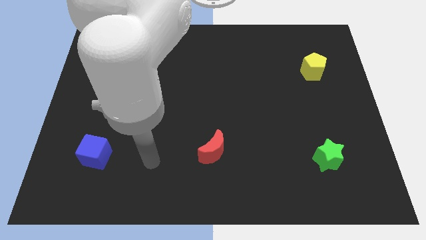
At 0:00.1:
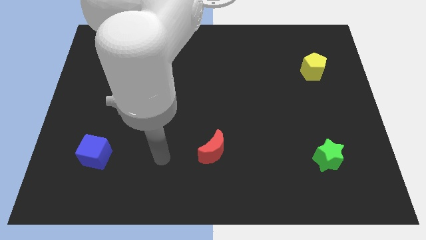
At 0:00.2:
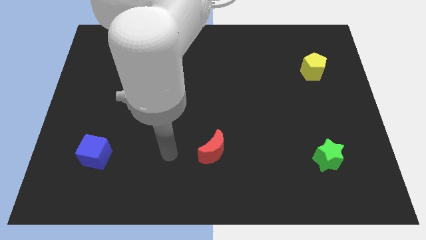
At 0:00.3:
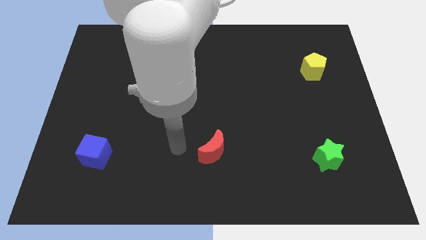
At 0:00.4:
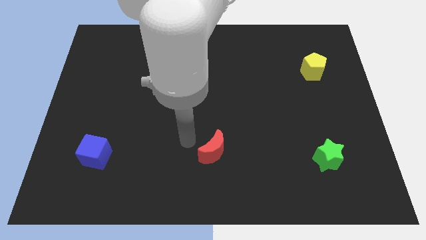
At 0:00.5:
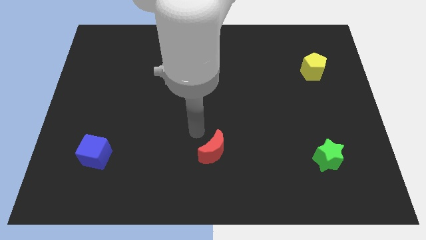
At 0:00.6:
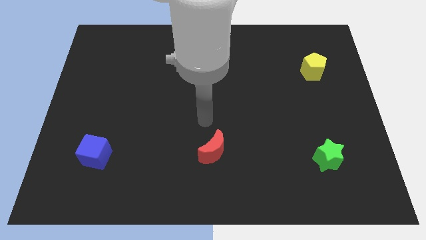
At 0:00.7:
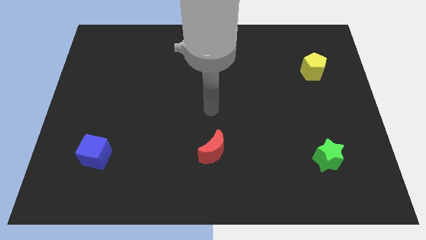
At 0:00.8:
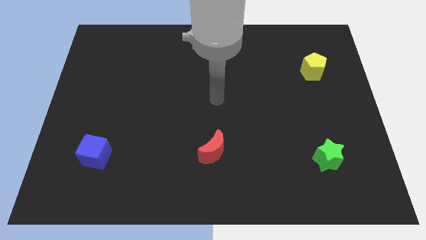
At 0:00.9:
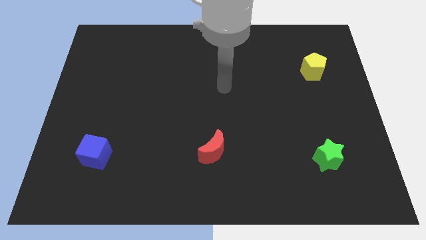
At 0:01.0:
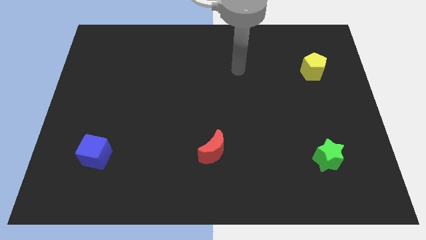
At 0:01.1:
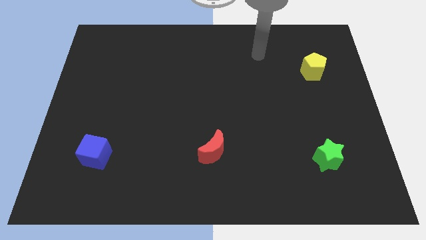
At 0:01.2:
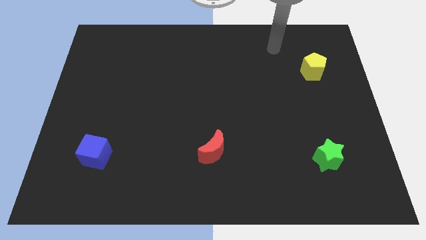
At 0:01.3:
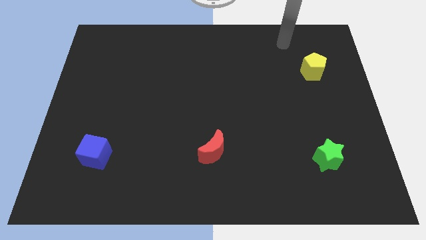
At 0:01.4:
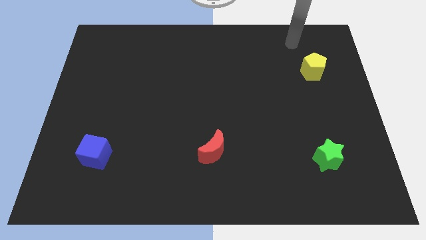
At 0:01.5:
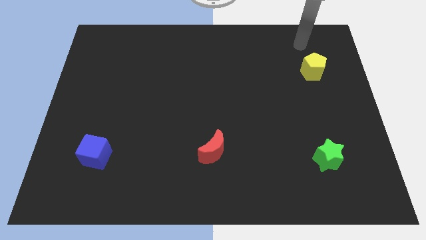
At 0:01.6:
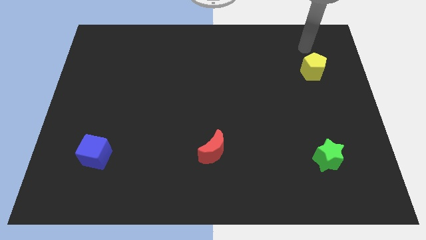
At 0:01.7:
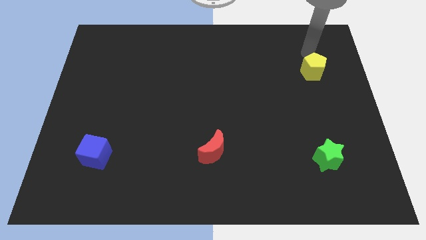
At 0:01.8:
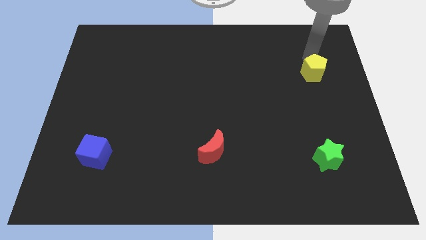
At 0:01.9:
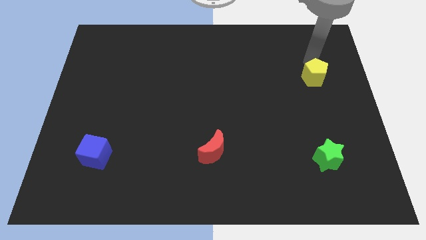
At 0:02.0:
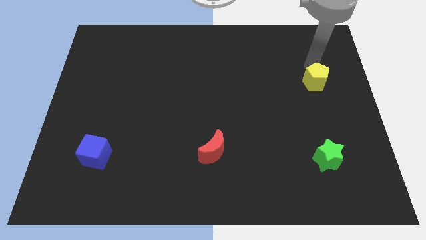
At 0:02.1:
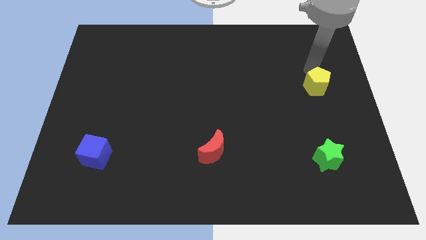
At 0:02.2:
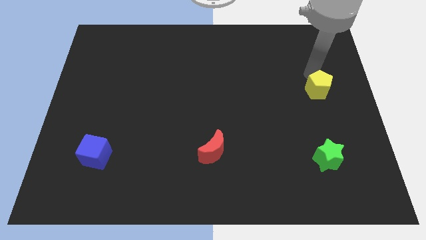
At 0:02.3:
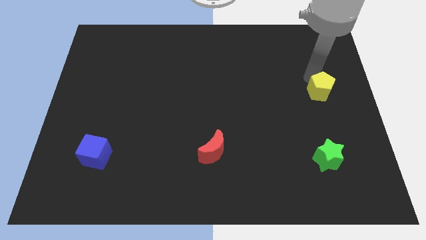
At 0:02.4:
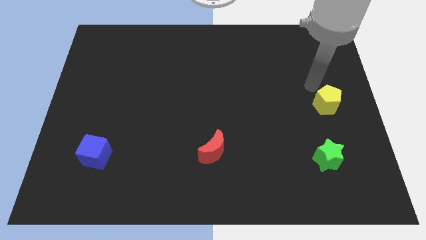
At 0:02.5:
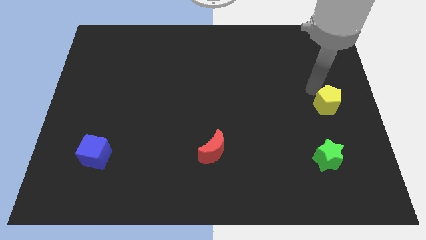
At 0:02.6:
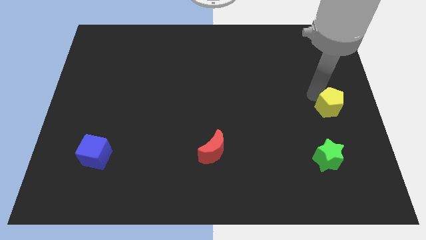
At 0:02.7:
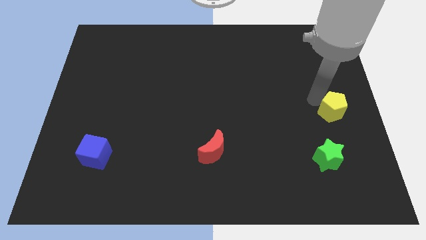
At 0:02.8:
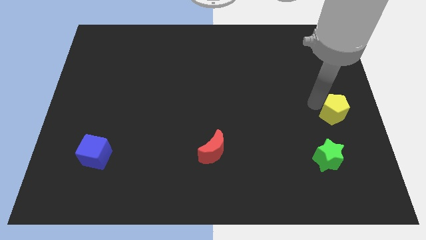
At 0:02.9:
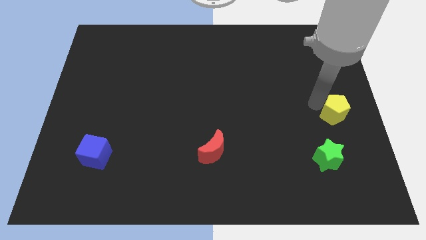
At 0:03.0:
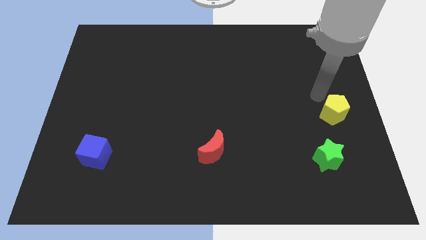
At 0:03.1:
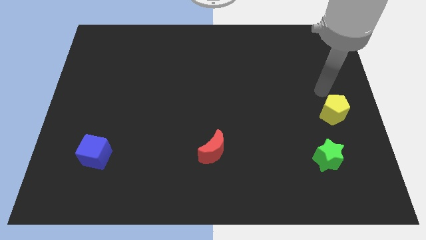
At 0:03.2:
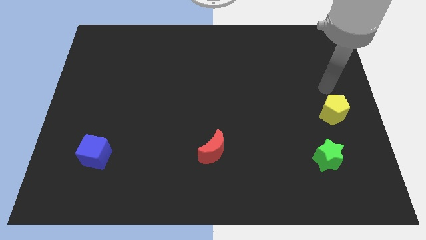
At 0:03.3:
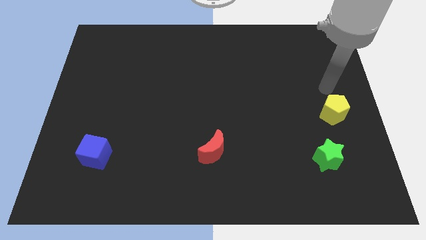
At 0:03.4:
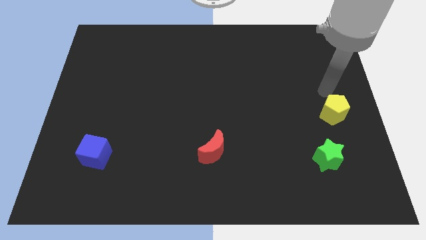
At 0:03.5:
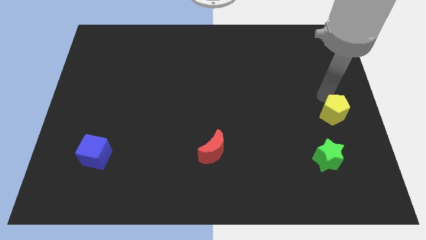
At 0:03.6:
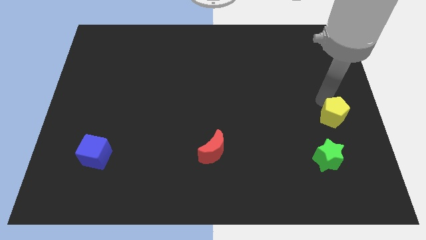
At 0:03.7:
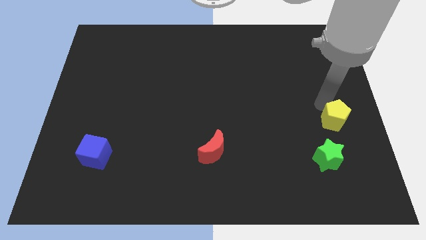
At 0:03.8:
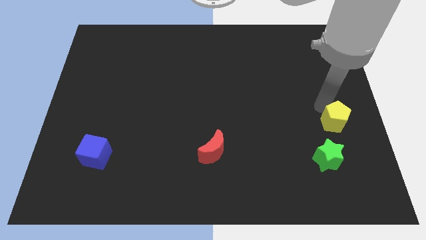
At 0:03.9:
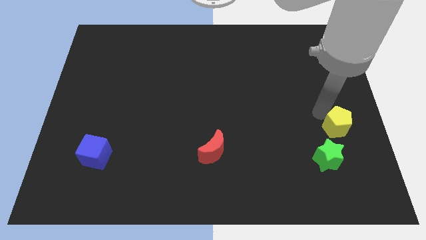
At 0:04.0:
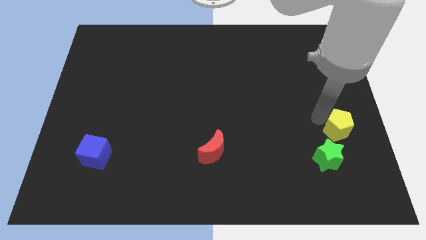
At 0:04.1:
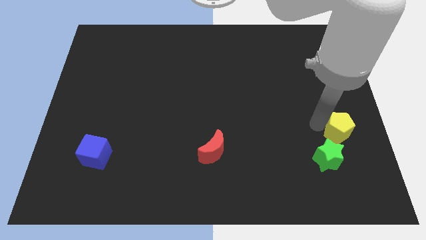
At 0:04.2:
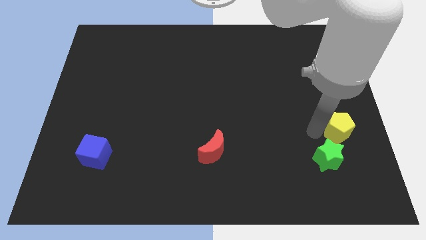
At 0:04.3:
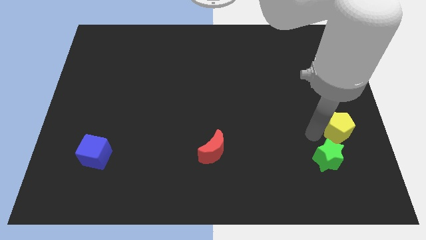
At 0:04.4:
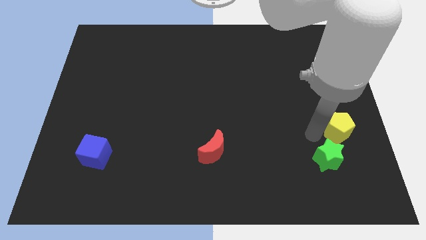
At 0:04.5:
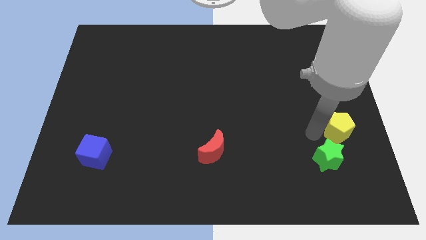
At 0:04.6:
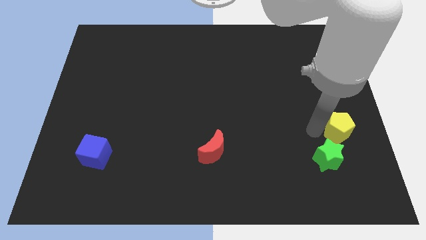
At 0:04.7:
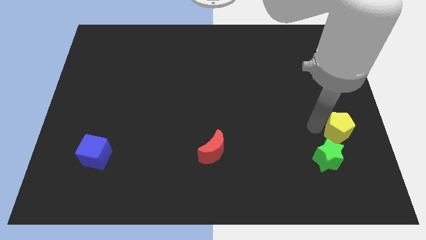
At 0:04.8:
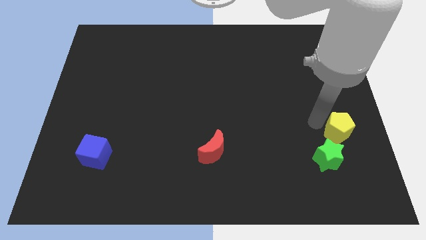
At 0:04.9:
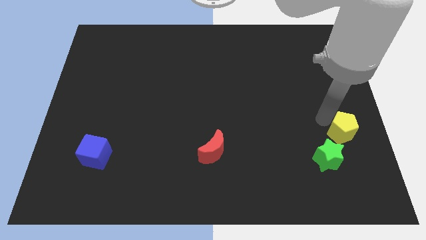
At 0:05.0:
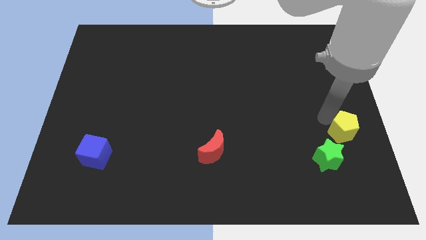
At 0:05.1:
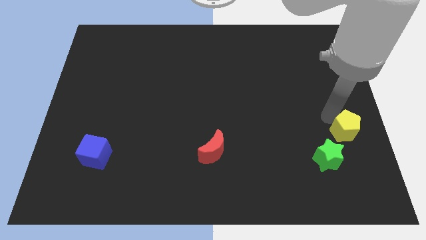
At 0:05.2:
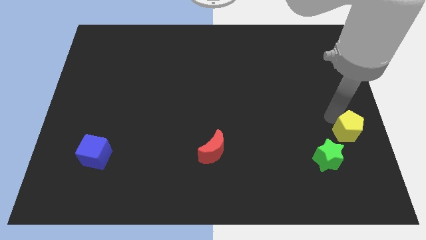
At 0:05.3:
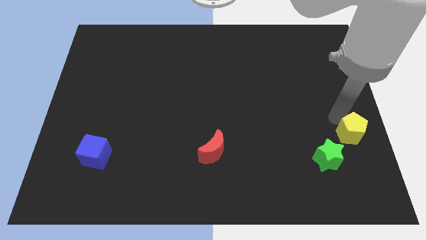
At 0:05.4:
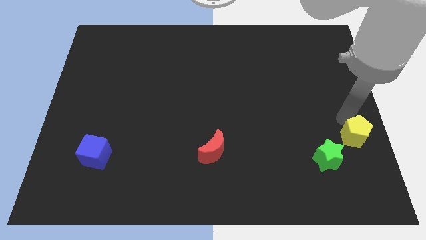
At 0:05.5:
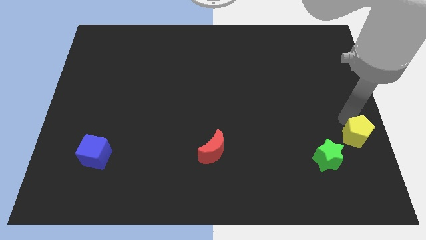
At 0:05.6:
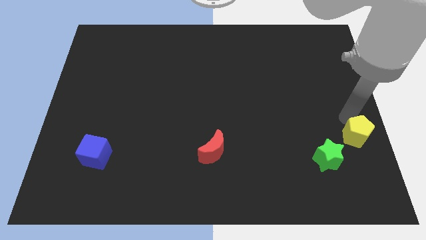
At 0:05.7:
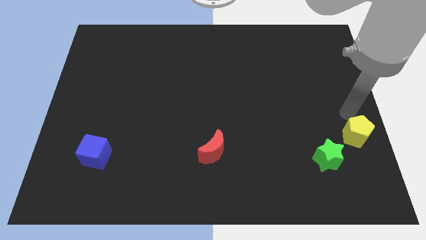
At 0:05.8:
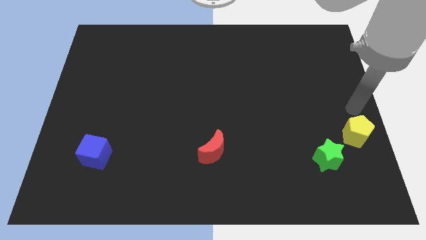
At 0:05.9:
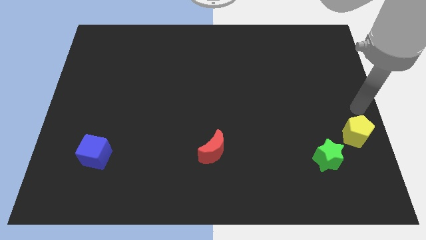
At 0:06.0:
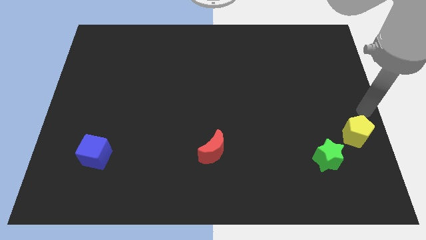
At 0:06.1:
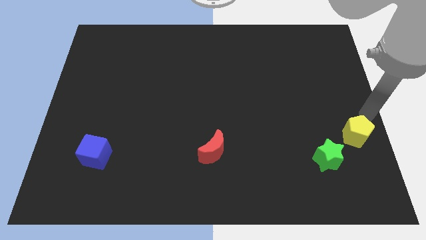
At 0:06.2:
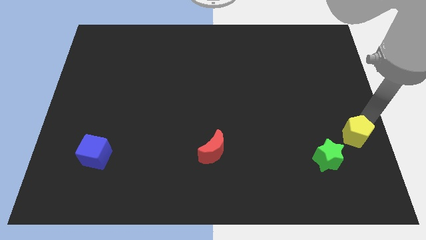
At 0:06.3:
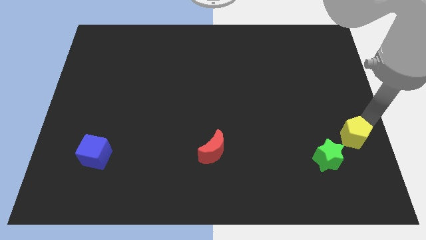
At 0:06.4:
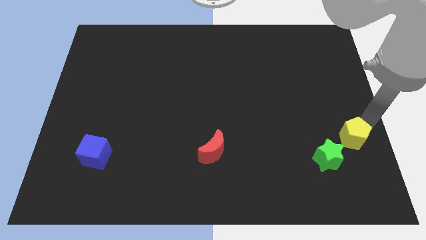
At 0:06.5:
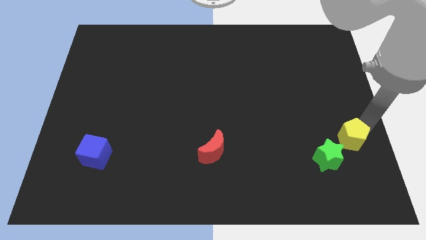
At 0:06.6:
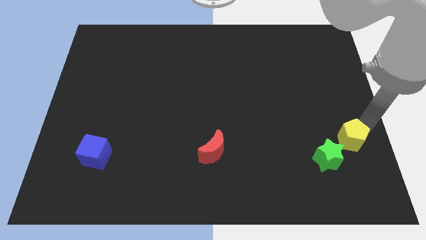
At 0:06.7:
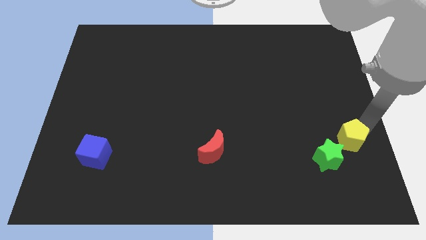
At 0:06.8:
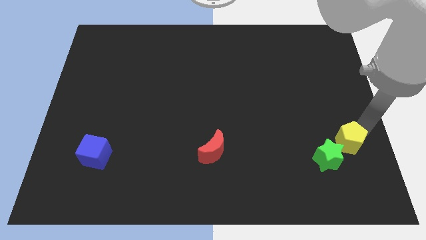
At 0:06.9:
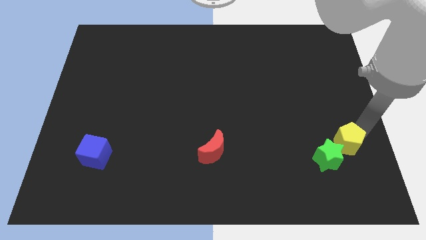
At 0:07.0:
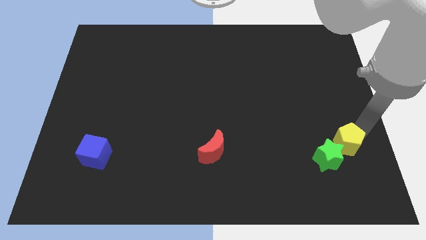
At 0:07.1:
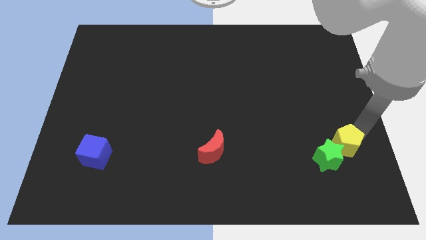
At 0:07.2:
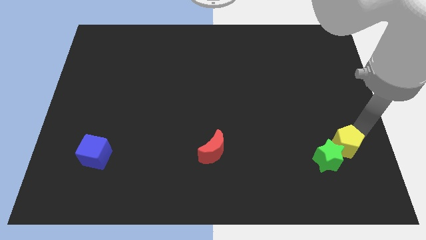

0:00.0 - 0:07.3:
slide the yellow pentagon close to the green star

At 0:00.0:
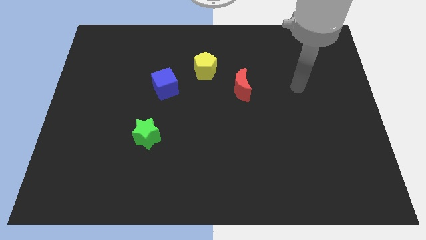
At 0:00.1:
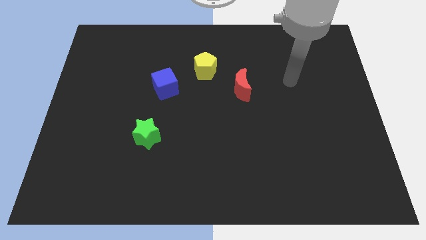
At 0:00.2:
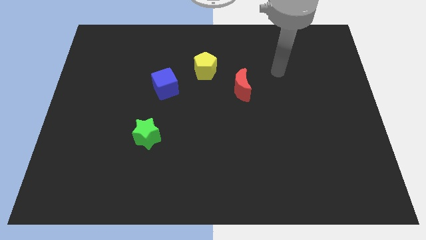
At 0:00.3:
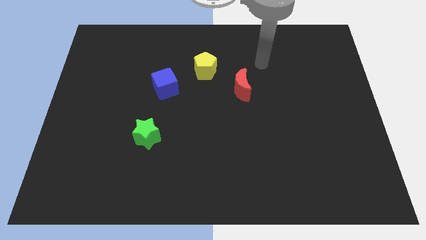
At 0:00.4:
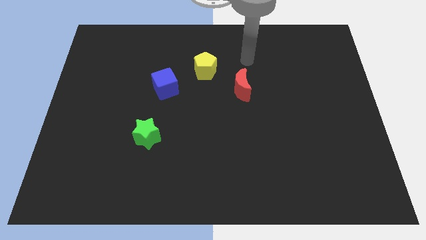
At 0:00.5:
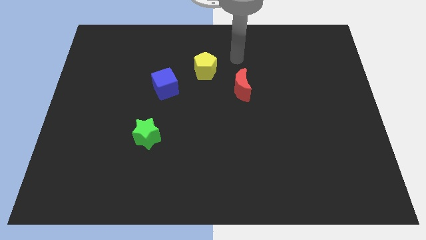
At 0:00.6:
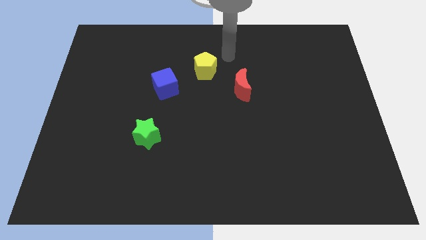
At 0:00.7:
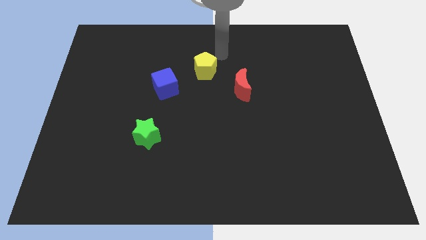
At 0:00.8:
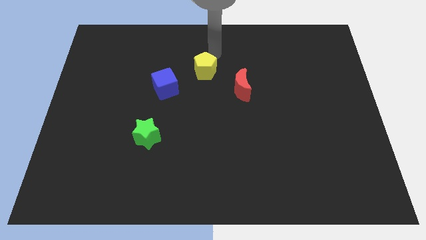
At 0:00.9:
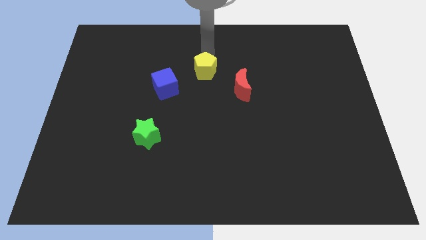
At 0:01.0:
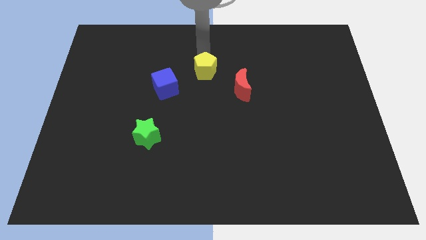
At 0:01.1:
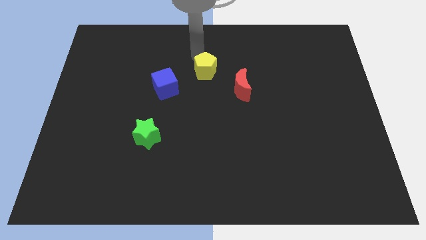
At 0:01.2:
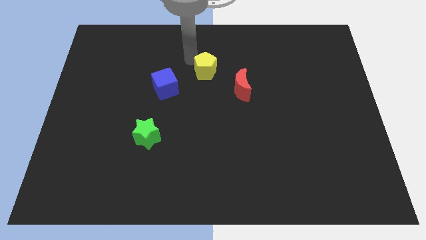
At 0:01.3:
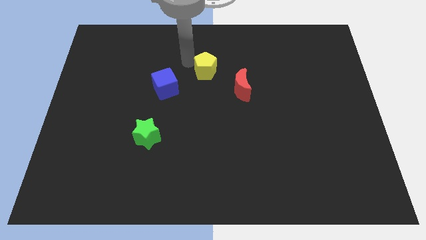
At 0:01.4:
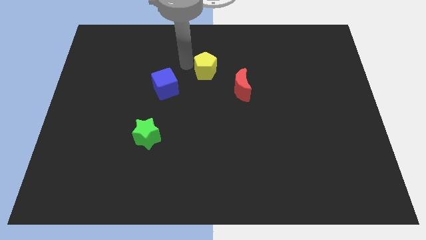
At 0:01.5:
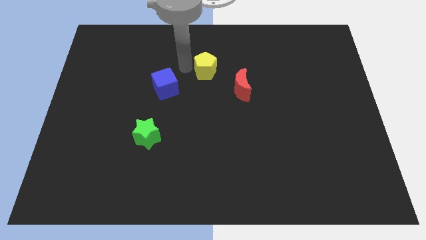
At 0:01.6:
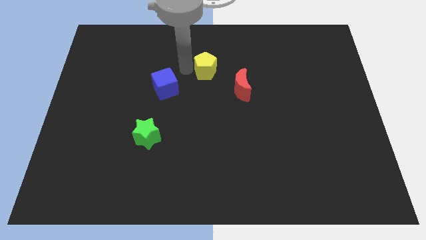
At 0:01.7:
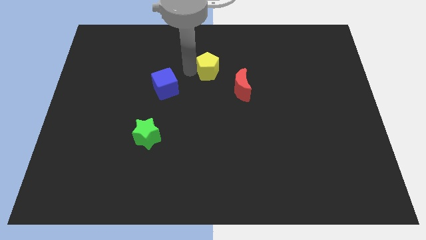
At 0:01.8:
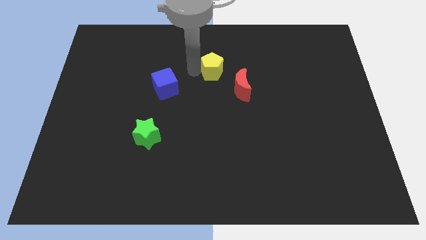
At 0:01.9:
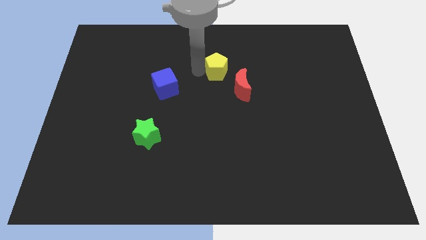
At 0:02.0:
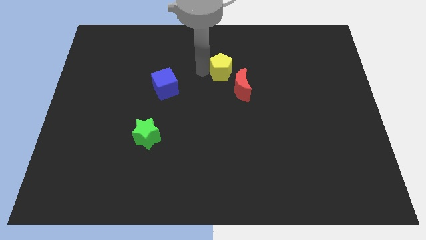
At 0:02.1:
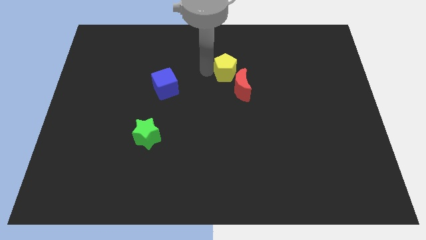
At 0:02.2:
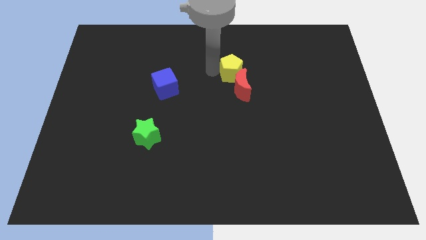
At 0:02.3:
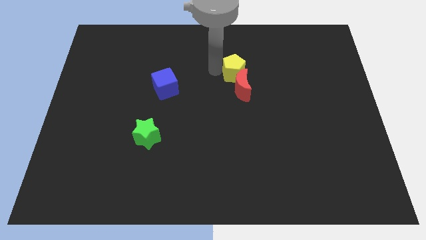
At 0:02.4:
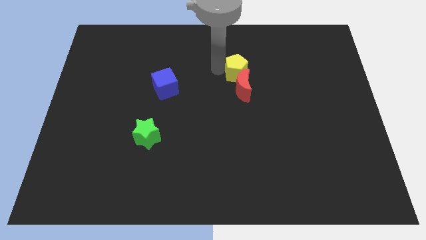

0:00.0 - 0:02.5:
push the yellow block close to the red block
